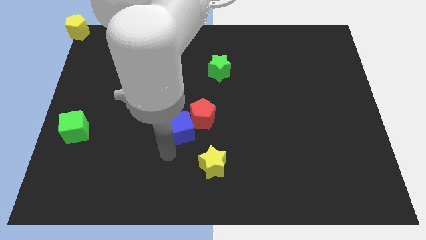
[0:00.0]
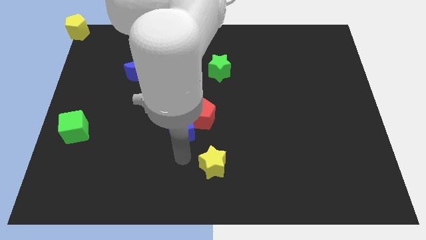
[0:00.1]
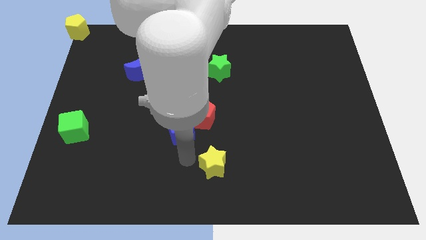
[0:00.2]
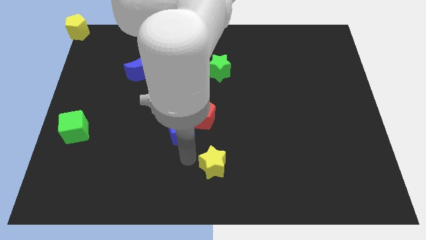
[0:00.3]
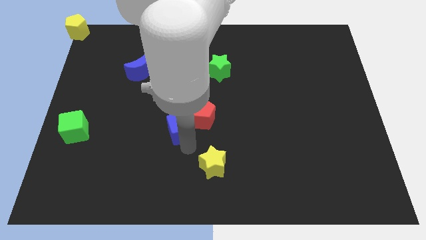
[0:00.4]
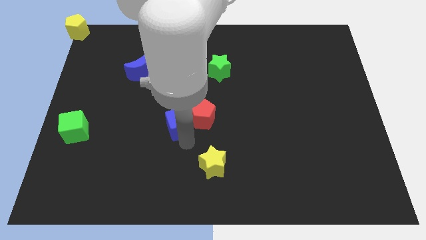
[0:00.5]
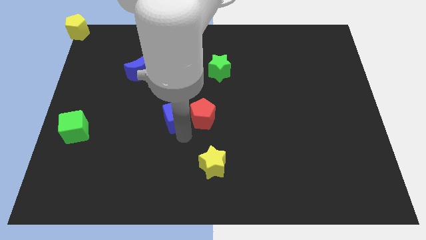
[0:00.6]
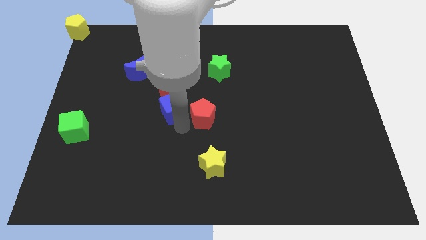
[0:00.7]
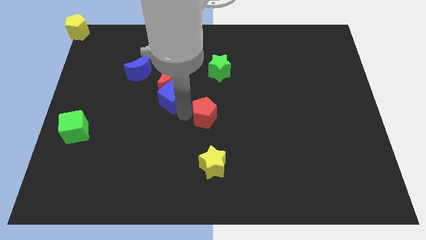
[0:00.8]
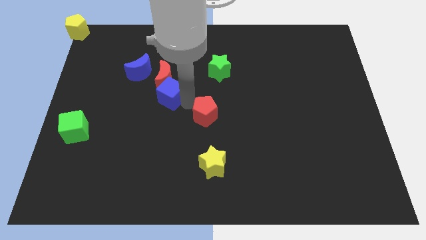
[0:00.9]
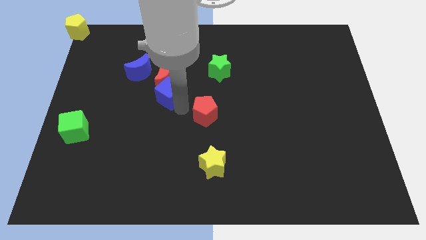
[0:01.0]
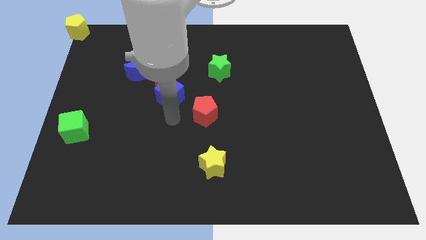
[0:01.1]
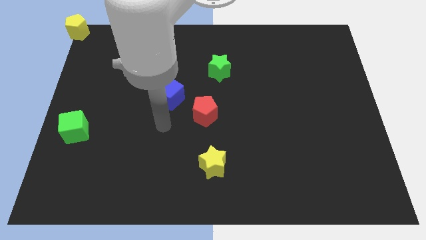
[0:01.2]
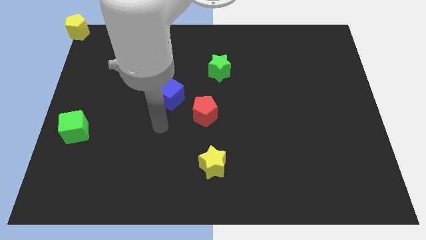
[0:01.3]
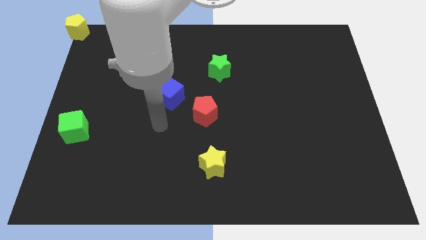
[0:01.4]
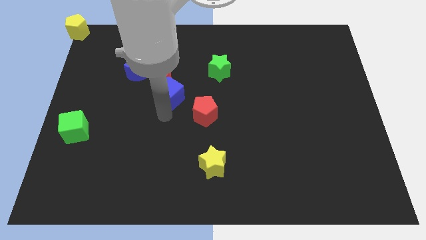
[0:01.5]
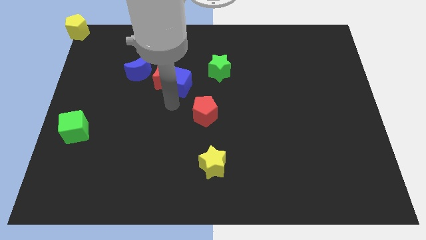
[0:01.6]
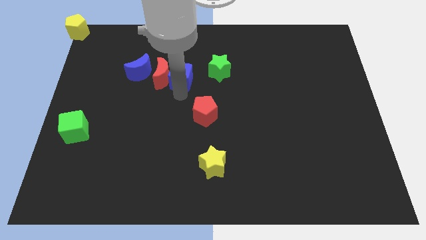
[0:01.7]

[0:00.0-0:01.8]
place the blue cube in between the red pentagon and red moon

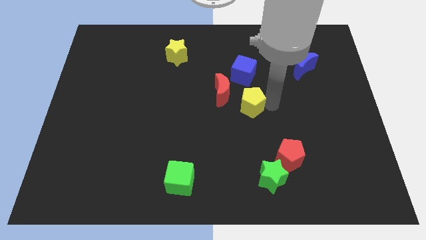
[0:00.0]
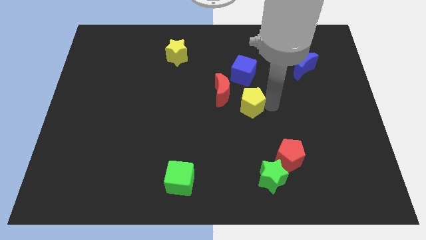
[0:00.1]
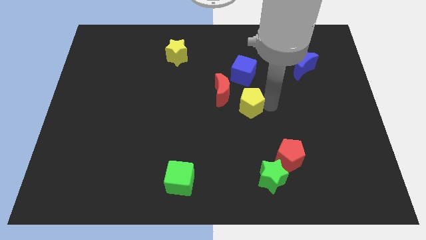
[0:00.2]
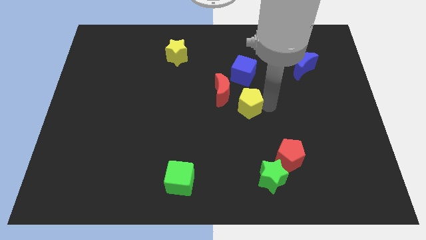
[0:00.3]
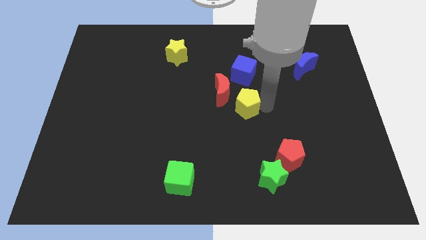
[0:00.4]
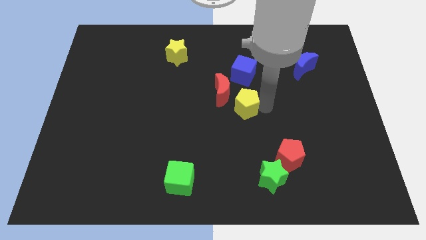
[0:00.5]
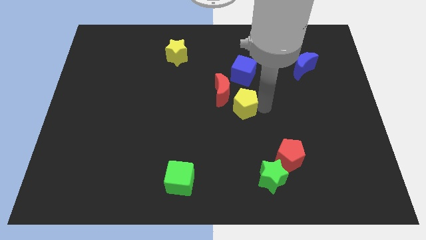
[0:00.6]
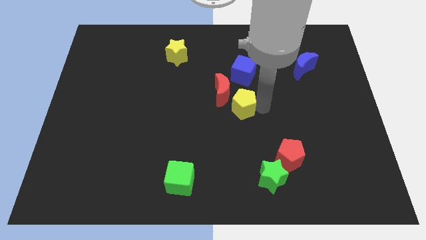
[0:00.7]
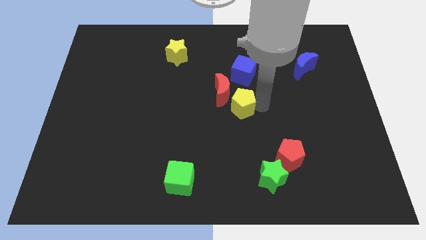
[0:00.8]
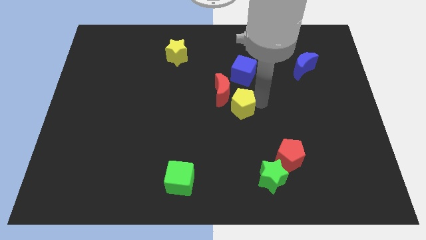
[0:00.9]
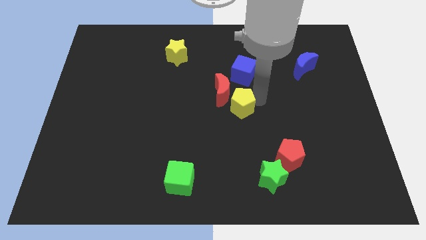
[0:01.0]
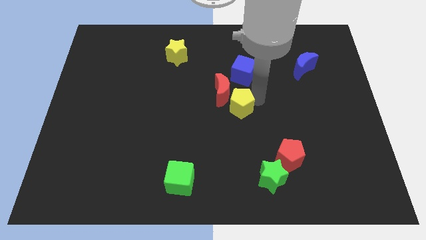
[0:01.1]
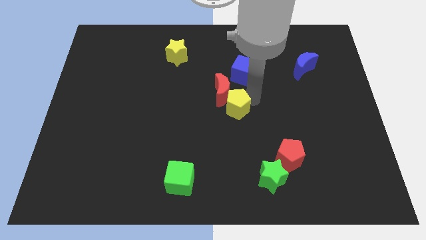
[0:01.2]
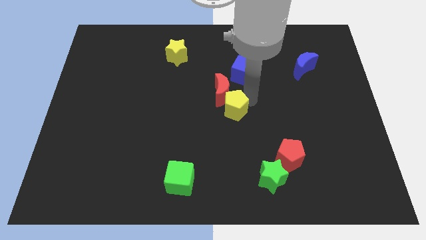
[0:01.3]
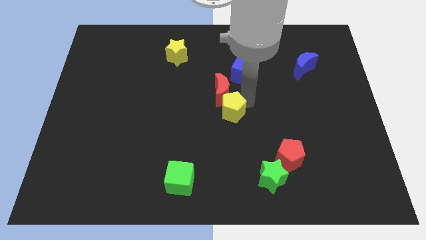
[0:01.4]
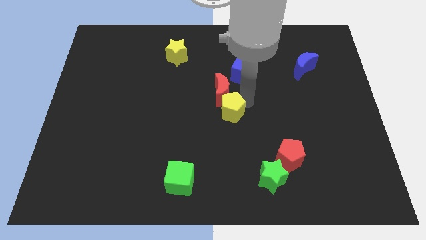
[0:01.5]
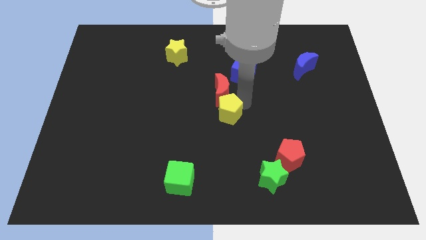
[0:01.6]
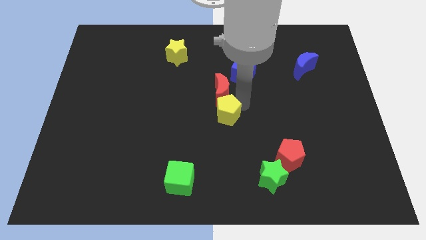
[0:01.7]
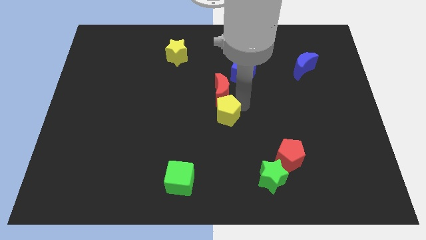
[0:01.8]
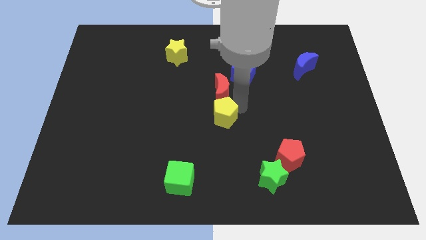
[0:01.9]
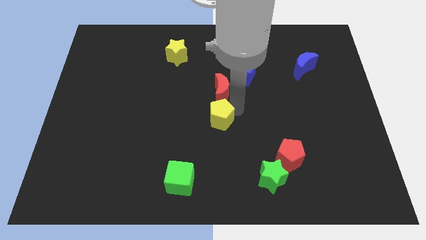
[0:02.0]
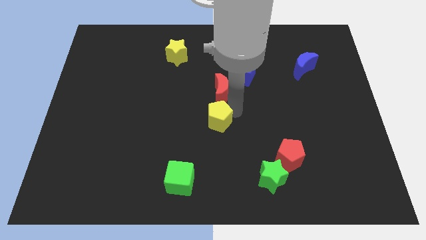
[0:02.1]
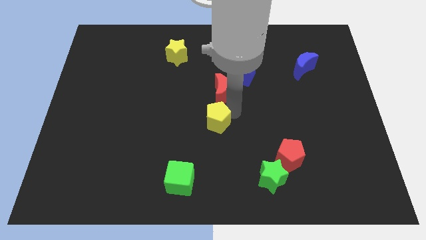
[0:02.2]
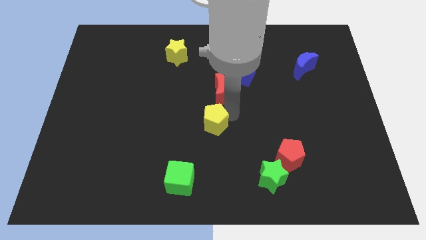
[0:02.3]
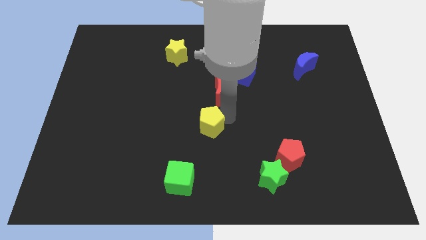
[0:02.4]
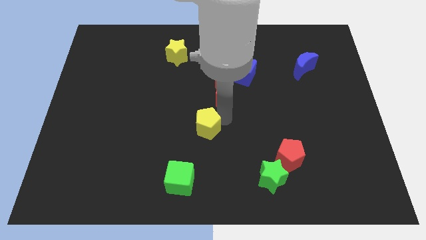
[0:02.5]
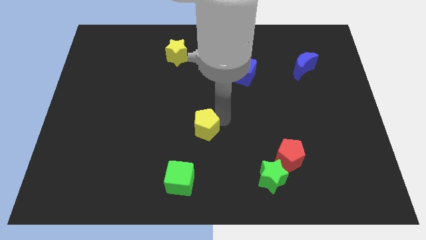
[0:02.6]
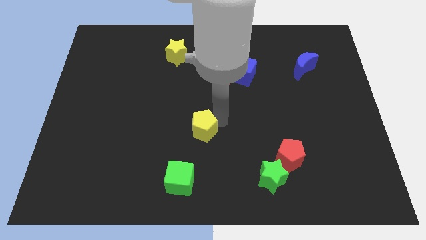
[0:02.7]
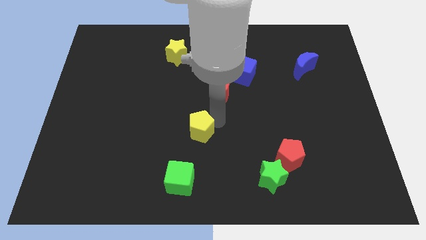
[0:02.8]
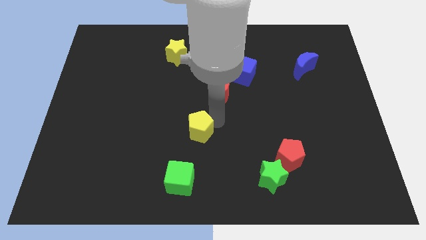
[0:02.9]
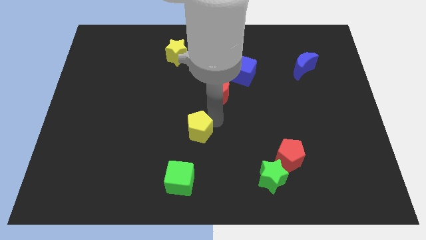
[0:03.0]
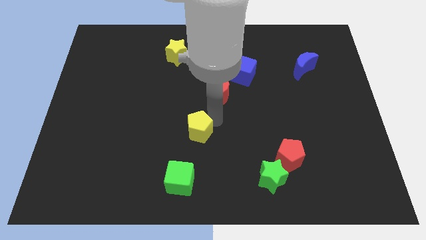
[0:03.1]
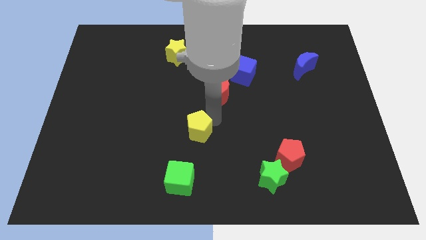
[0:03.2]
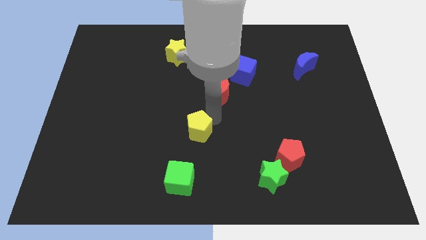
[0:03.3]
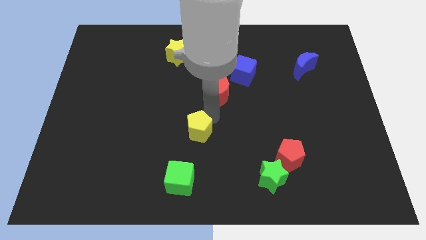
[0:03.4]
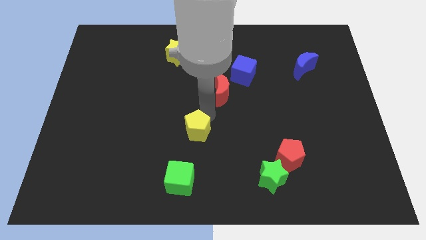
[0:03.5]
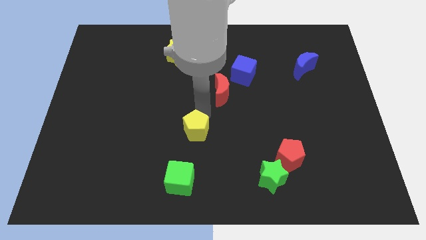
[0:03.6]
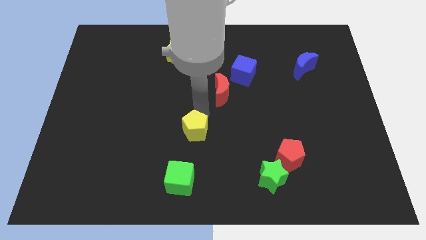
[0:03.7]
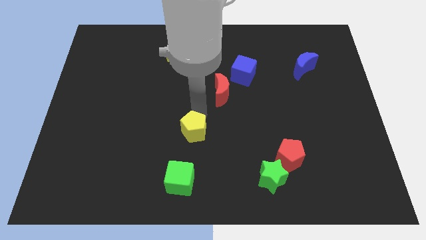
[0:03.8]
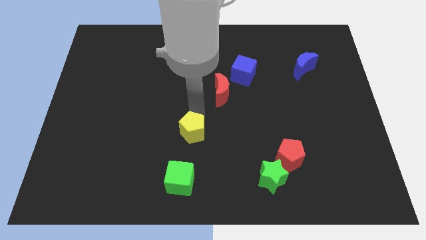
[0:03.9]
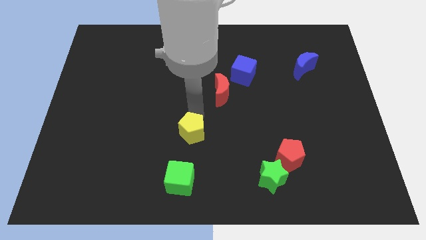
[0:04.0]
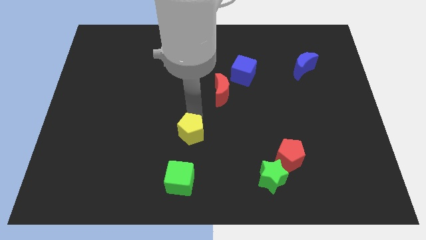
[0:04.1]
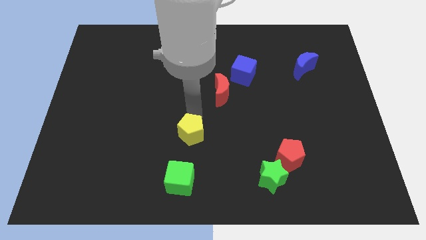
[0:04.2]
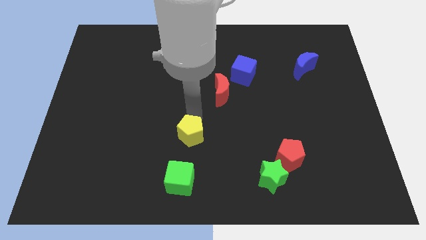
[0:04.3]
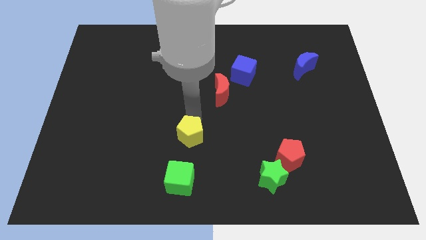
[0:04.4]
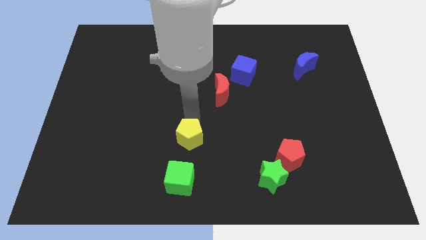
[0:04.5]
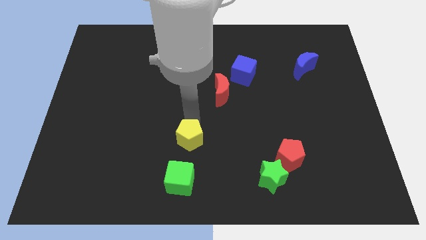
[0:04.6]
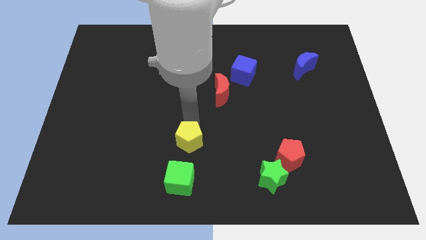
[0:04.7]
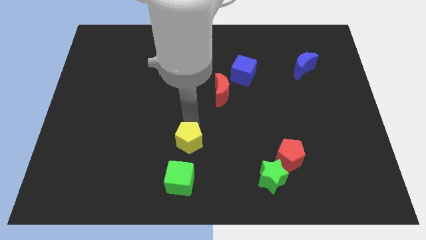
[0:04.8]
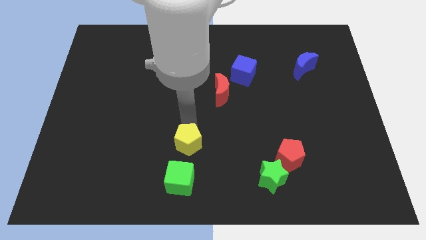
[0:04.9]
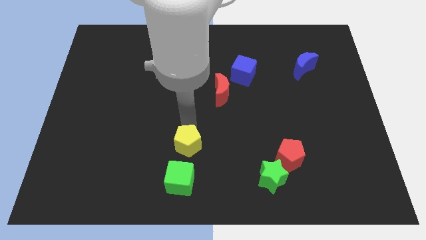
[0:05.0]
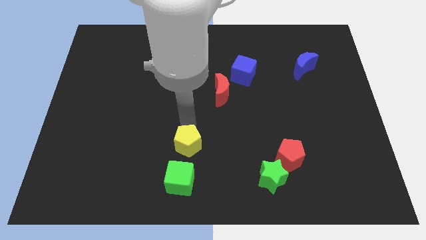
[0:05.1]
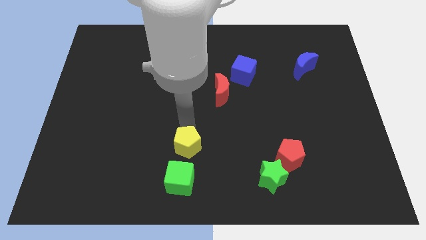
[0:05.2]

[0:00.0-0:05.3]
move the yellow pentagon to the top of the green cube

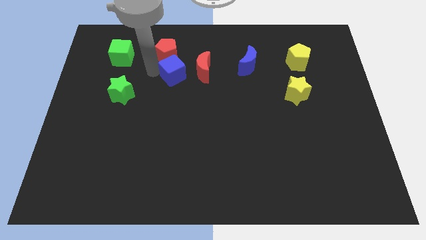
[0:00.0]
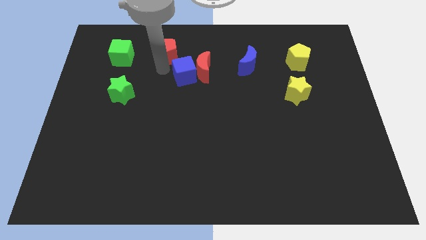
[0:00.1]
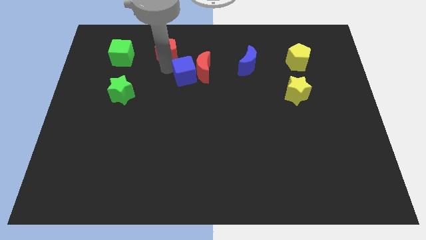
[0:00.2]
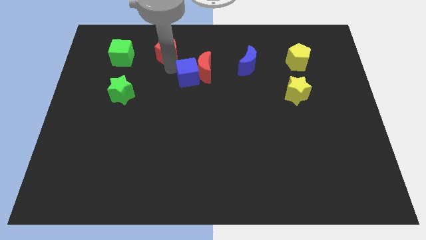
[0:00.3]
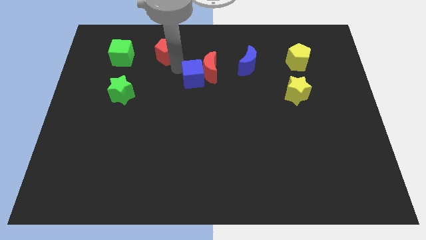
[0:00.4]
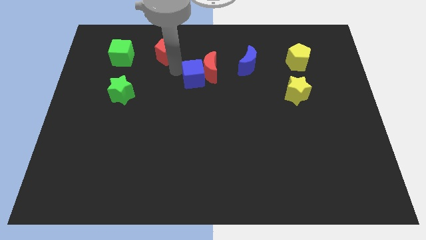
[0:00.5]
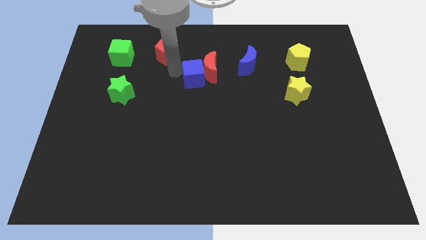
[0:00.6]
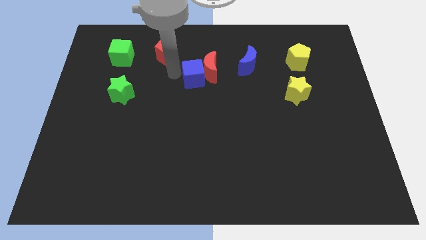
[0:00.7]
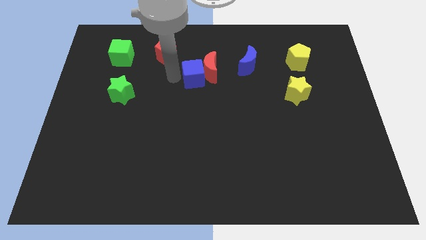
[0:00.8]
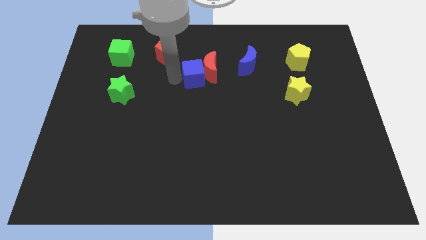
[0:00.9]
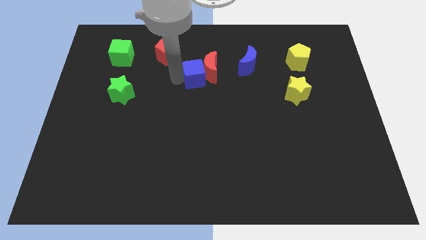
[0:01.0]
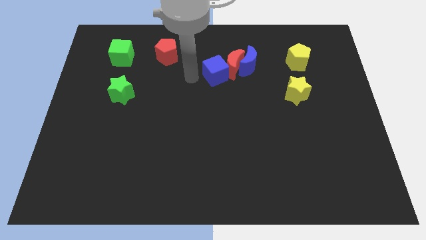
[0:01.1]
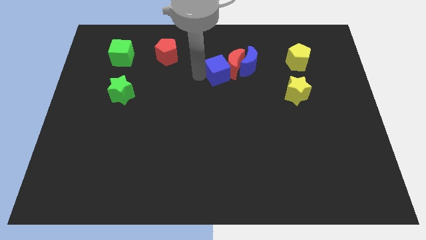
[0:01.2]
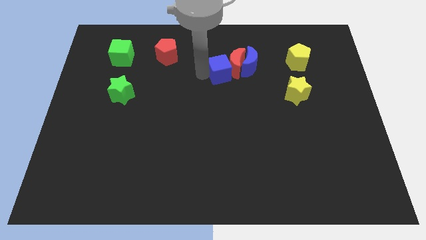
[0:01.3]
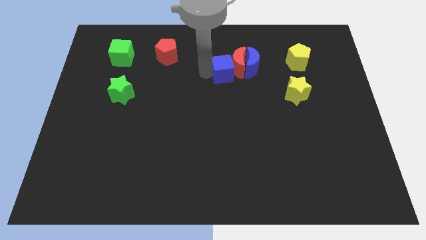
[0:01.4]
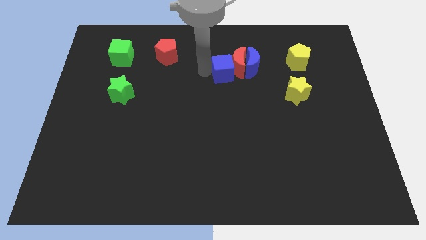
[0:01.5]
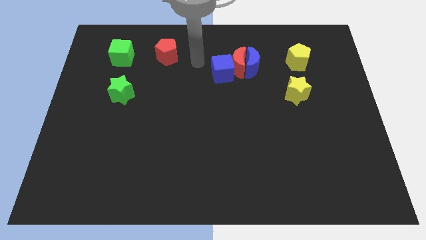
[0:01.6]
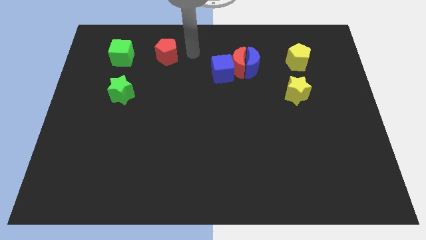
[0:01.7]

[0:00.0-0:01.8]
push the red crescent with the help of blue cube towards blue crescent

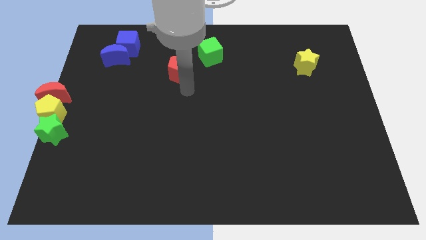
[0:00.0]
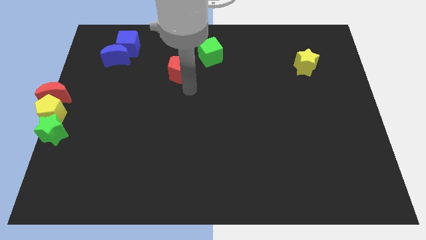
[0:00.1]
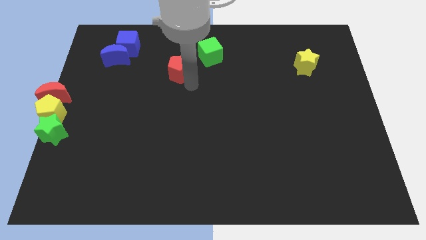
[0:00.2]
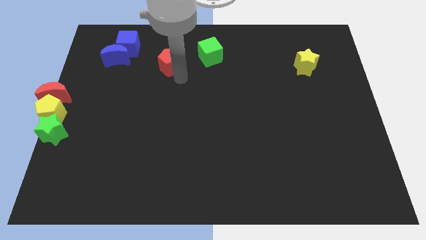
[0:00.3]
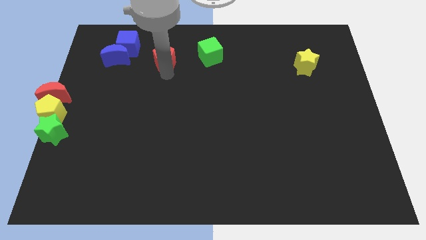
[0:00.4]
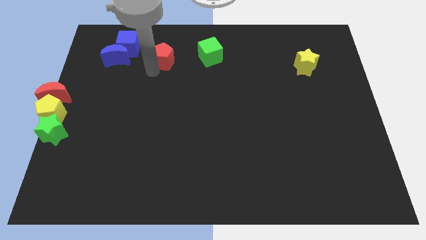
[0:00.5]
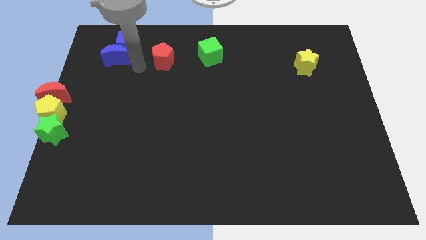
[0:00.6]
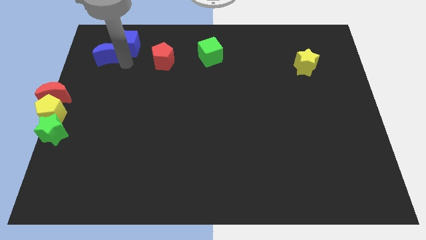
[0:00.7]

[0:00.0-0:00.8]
push the red pentagon in between the green cube and the blue moon
